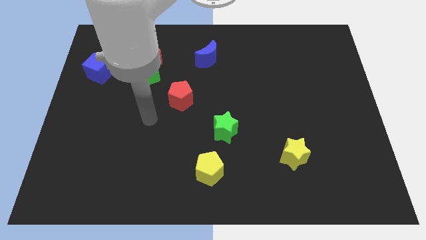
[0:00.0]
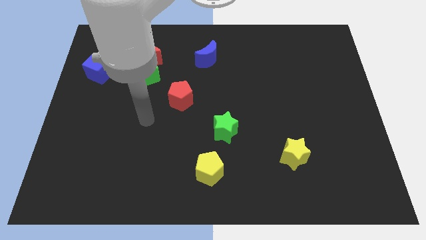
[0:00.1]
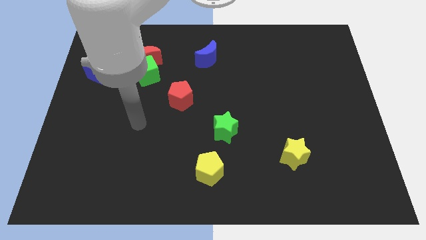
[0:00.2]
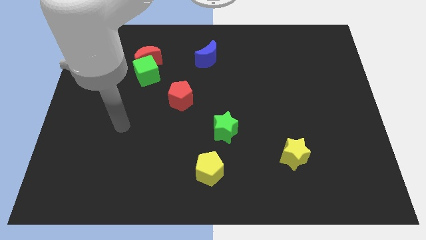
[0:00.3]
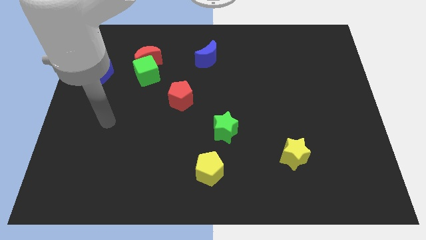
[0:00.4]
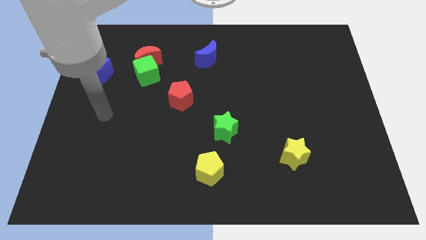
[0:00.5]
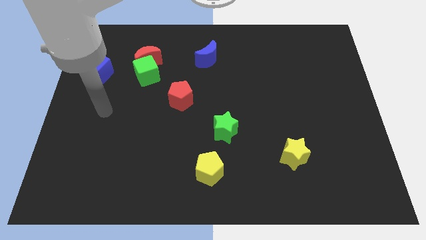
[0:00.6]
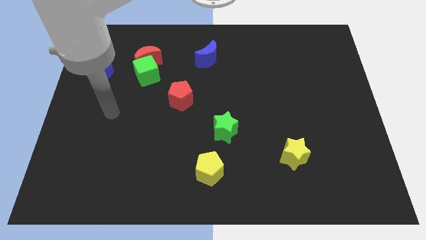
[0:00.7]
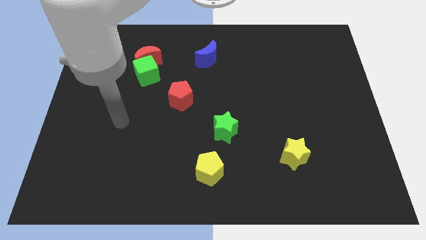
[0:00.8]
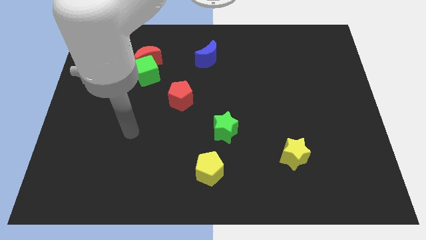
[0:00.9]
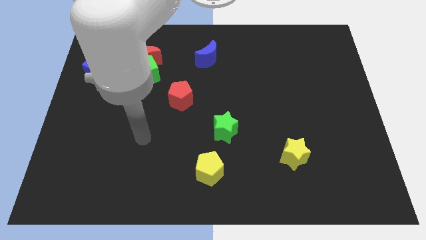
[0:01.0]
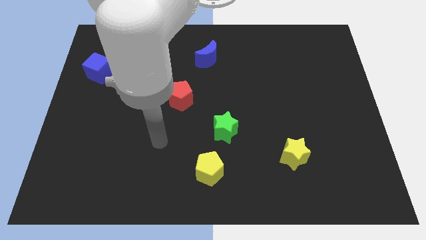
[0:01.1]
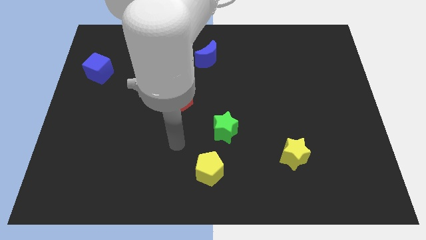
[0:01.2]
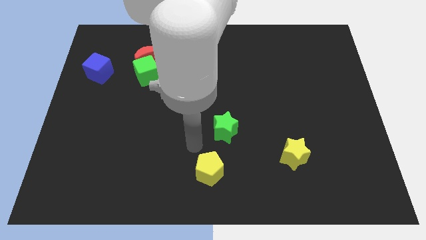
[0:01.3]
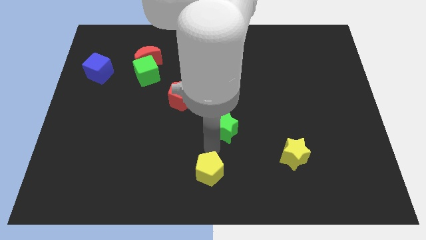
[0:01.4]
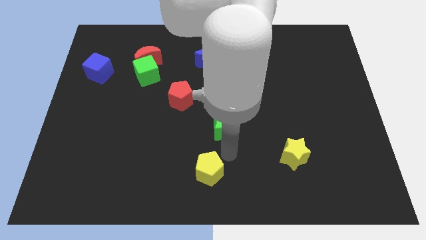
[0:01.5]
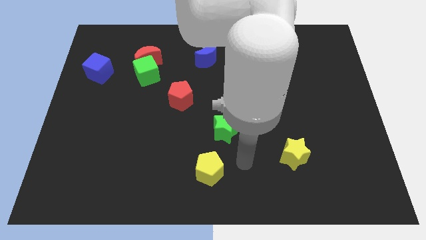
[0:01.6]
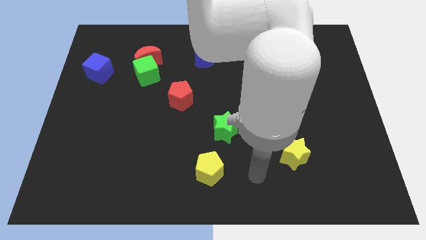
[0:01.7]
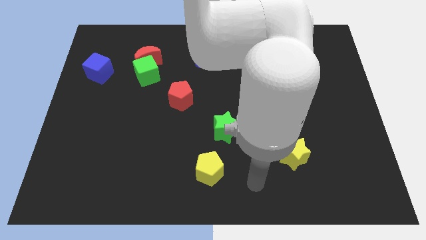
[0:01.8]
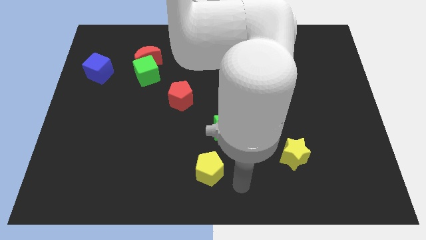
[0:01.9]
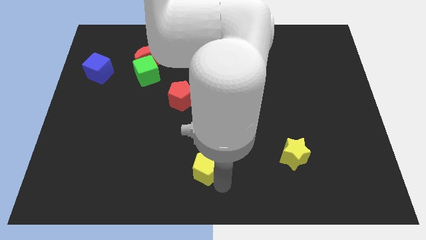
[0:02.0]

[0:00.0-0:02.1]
move your arm to the right side of the yellow pentagon

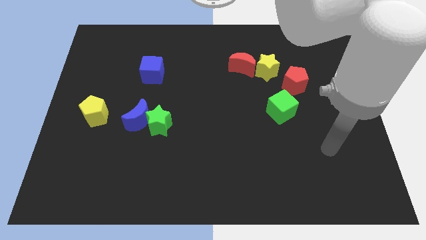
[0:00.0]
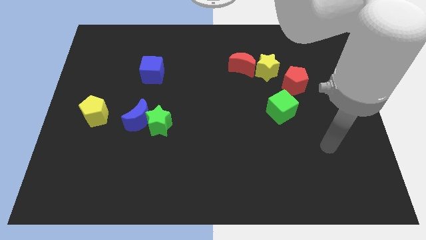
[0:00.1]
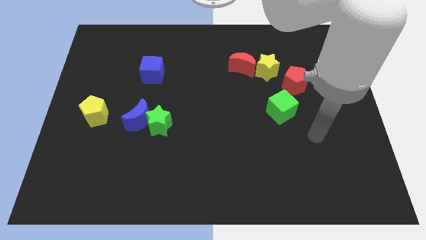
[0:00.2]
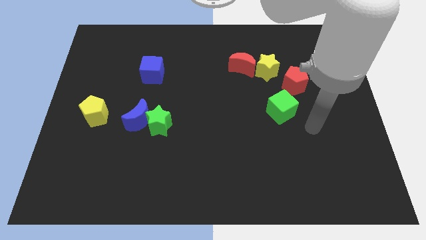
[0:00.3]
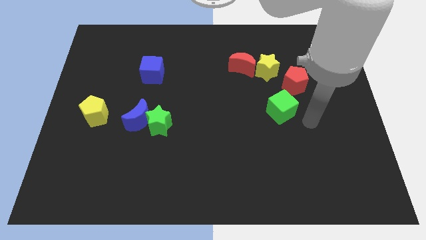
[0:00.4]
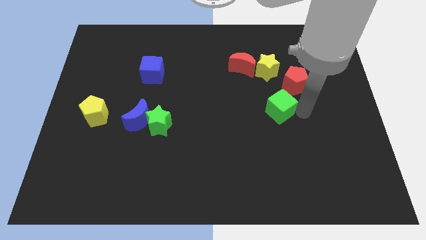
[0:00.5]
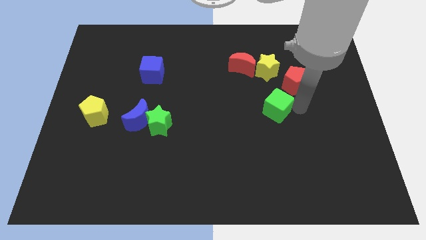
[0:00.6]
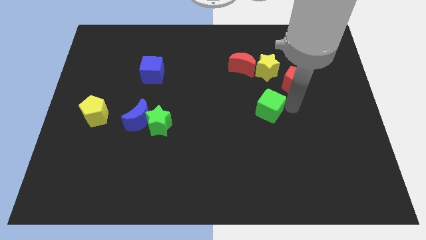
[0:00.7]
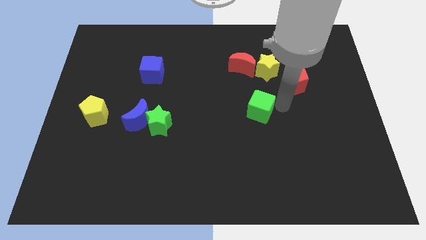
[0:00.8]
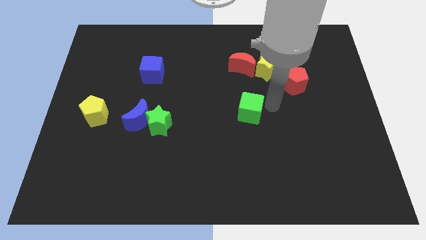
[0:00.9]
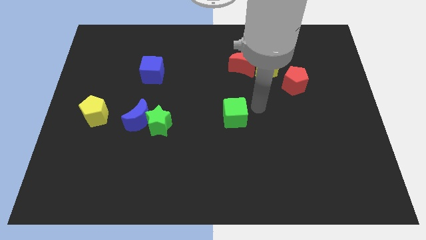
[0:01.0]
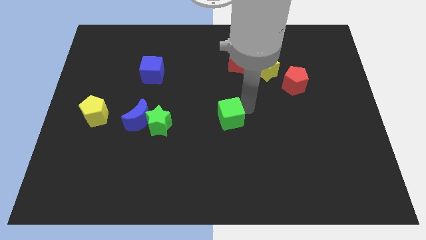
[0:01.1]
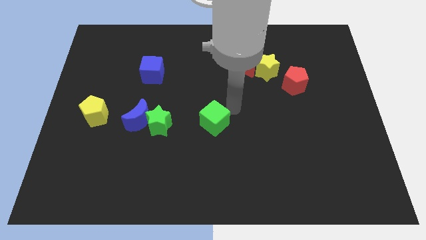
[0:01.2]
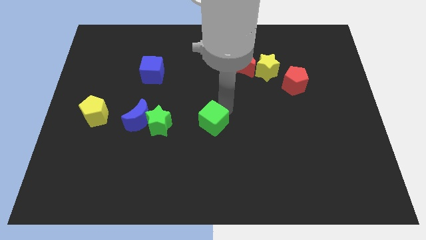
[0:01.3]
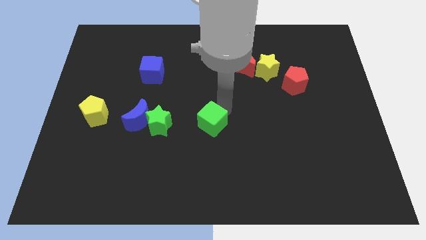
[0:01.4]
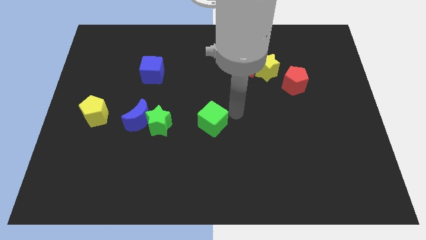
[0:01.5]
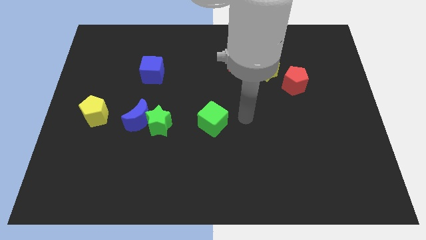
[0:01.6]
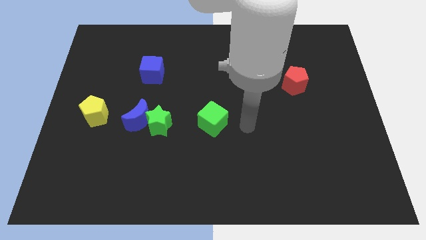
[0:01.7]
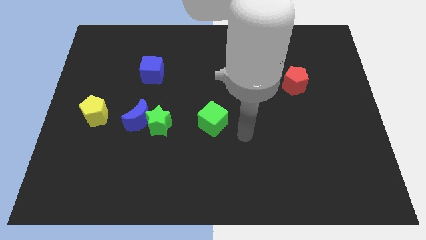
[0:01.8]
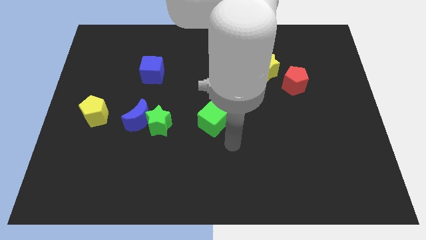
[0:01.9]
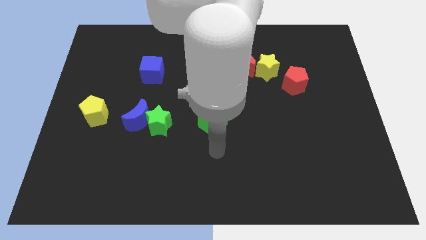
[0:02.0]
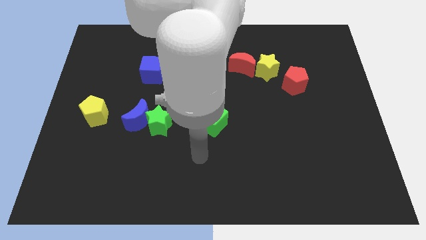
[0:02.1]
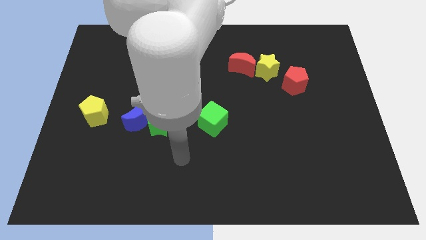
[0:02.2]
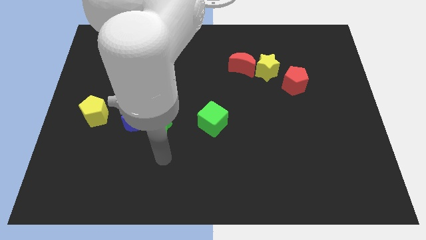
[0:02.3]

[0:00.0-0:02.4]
place the green cube to the center of the board

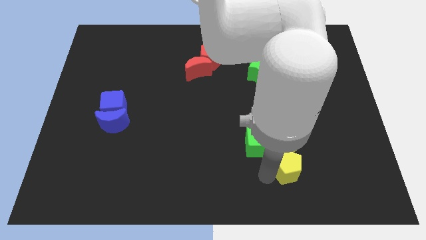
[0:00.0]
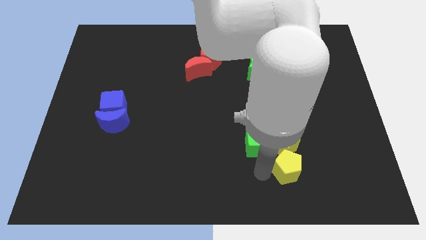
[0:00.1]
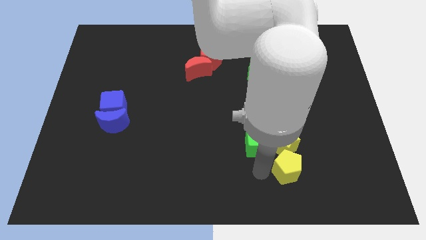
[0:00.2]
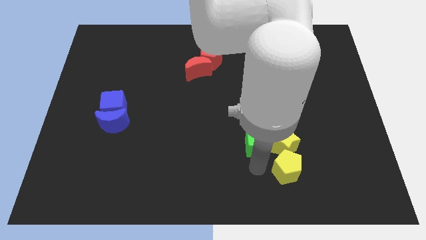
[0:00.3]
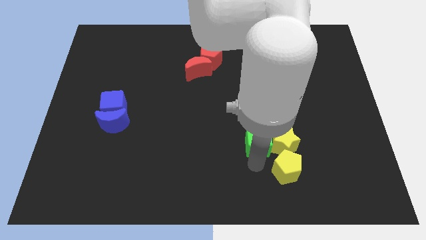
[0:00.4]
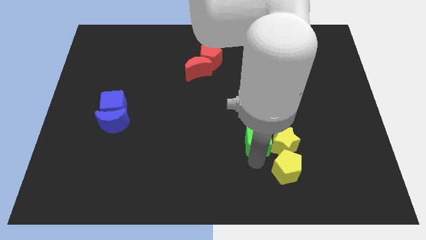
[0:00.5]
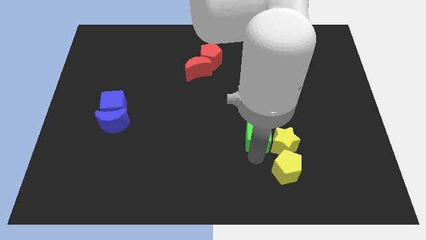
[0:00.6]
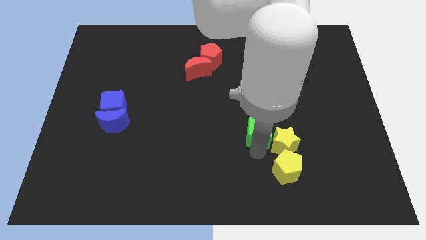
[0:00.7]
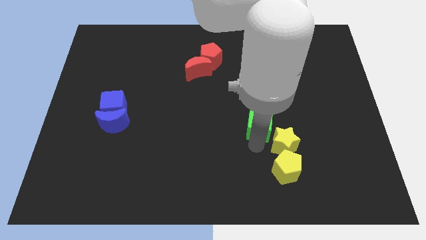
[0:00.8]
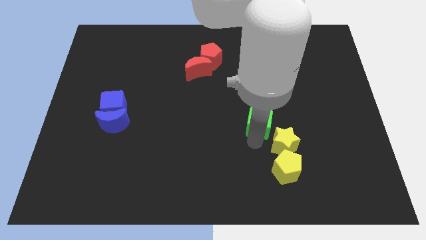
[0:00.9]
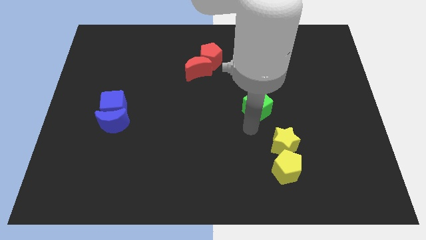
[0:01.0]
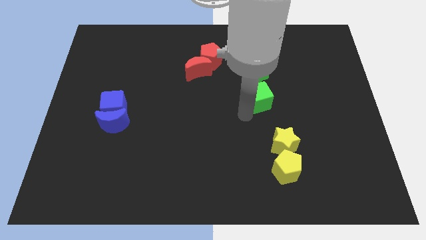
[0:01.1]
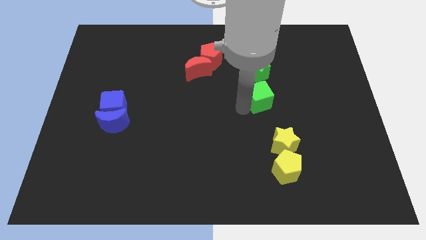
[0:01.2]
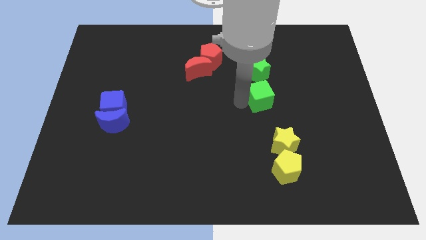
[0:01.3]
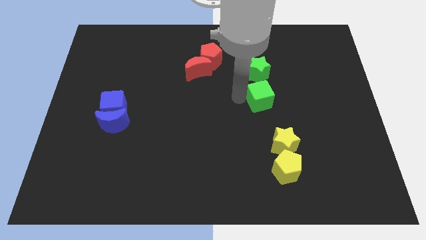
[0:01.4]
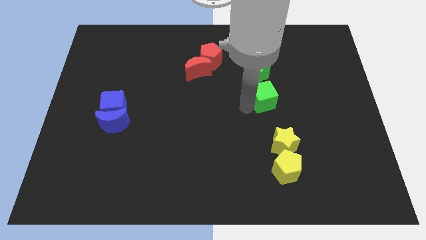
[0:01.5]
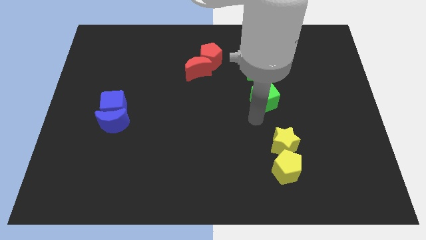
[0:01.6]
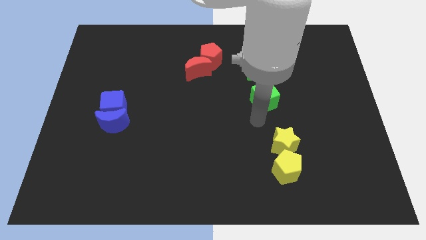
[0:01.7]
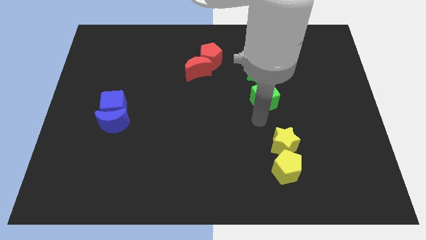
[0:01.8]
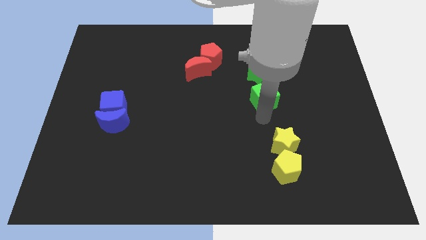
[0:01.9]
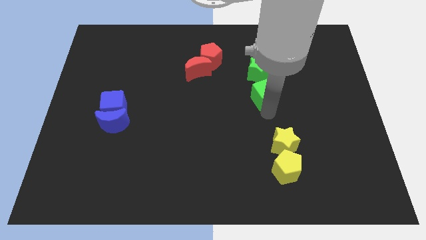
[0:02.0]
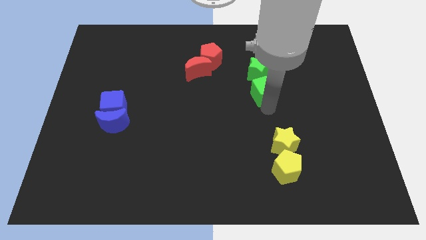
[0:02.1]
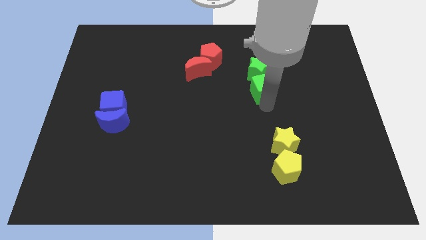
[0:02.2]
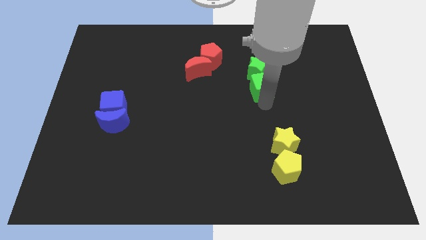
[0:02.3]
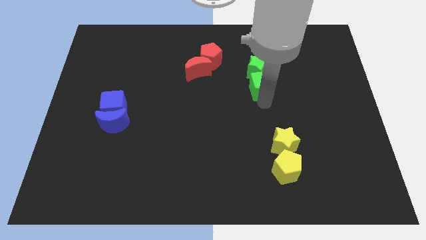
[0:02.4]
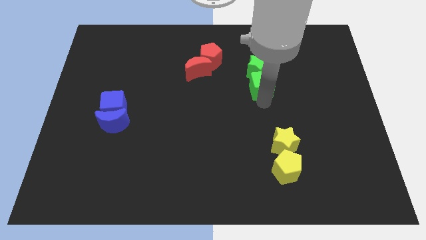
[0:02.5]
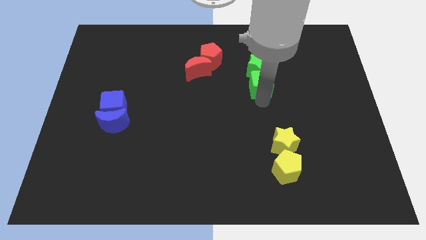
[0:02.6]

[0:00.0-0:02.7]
push the green cube into the green star

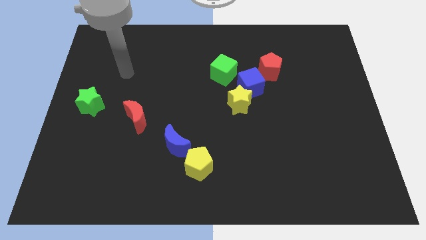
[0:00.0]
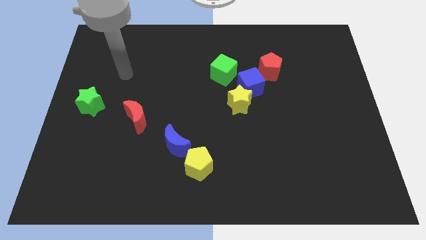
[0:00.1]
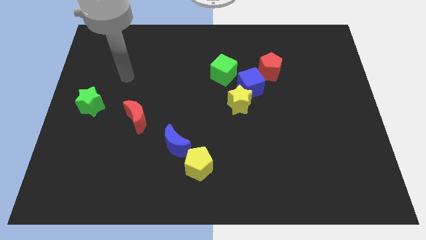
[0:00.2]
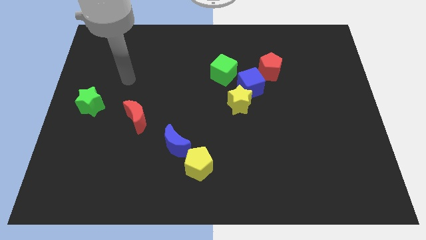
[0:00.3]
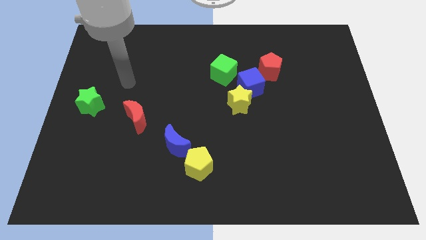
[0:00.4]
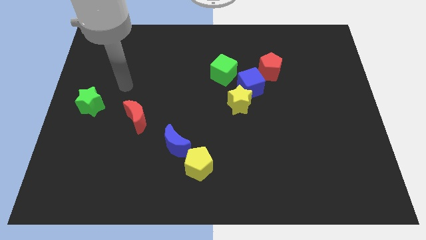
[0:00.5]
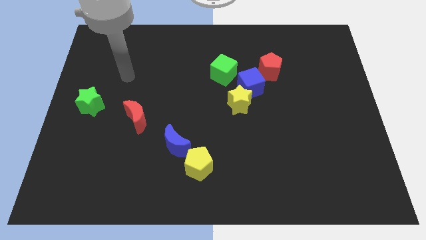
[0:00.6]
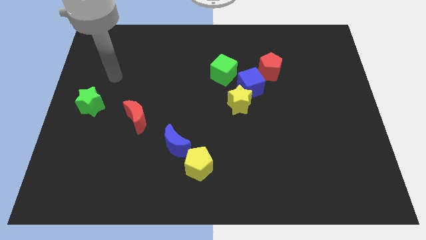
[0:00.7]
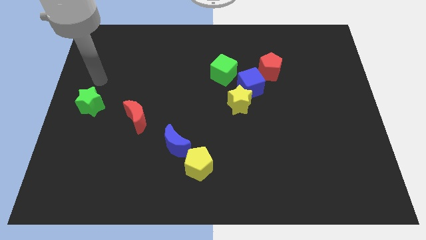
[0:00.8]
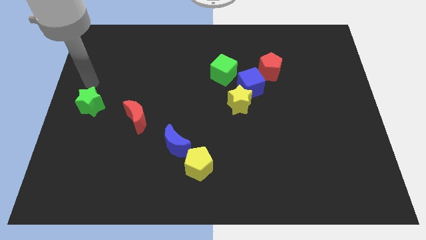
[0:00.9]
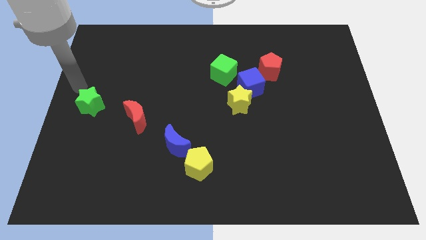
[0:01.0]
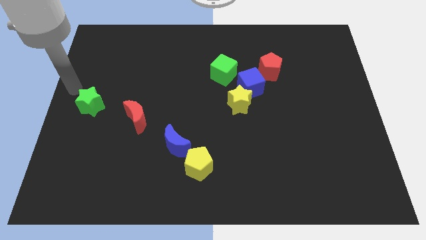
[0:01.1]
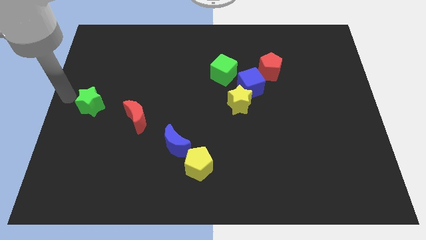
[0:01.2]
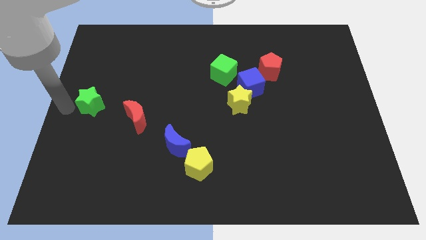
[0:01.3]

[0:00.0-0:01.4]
move your arm to the left of the green star

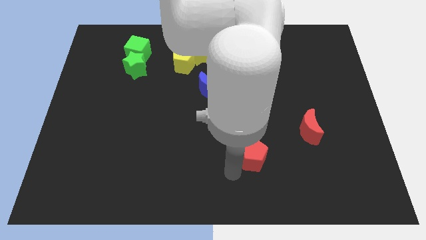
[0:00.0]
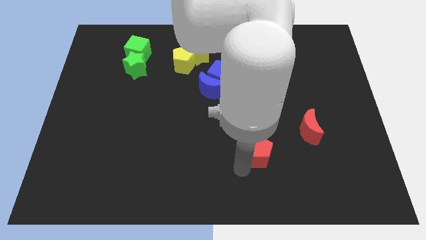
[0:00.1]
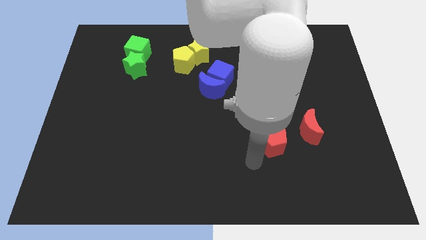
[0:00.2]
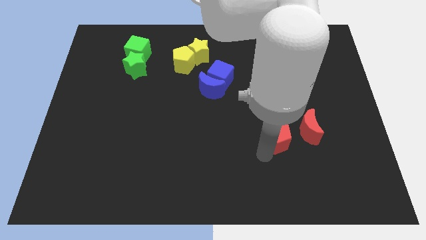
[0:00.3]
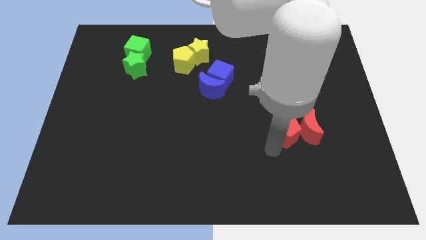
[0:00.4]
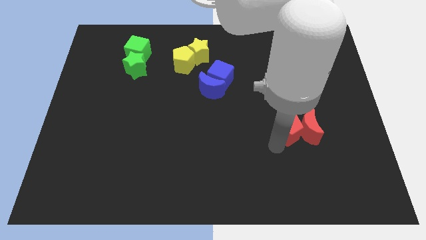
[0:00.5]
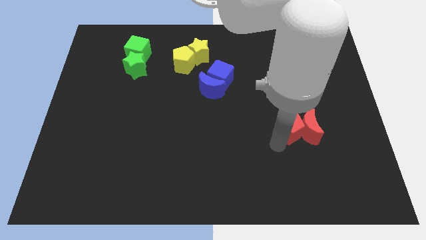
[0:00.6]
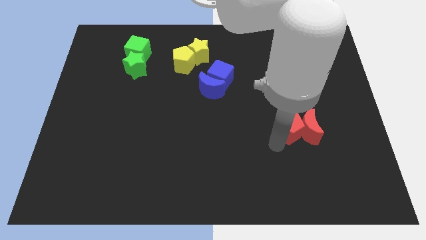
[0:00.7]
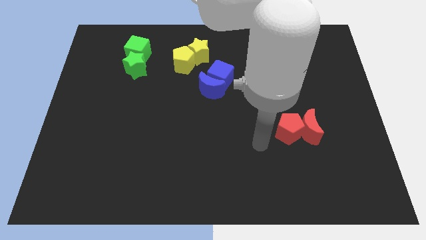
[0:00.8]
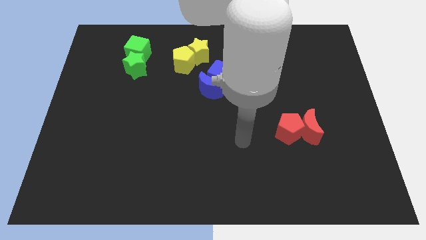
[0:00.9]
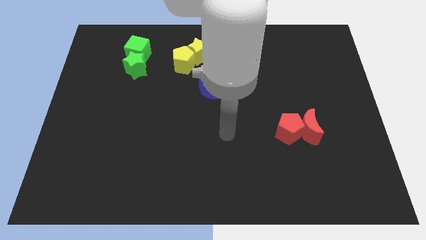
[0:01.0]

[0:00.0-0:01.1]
place the red pentagon to the left of the red moon
